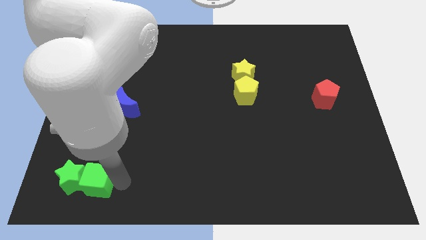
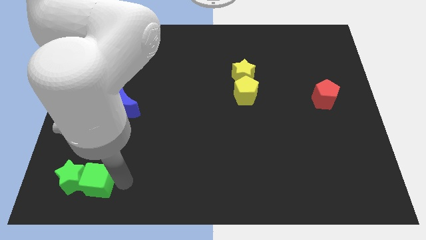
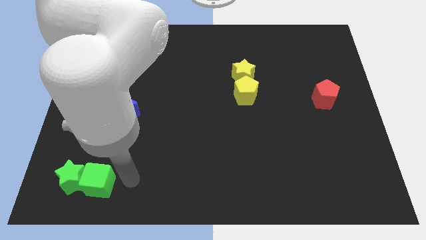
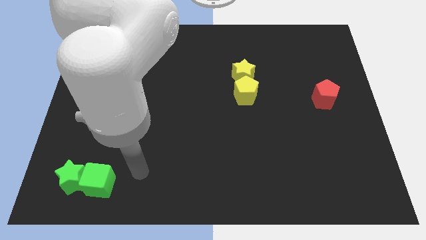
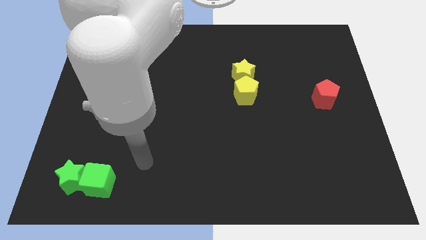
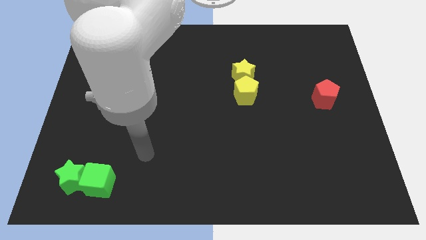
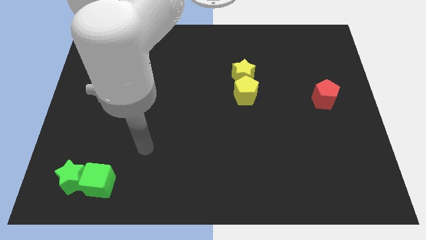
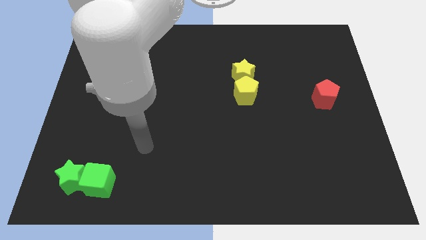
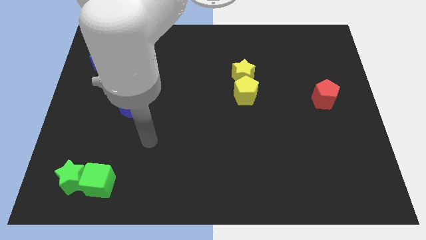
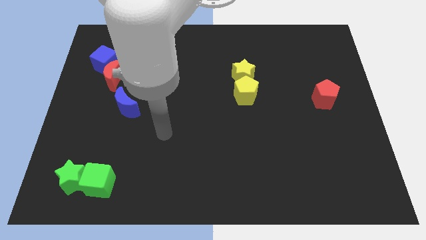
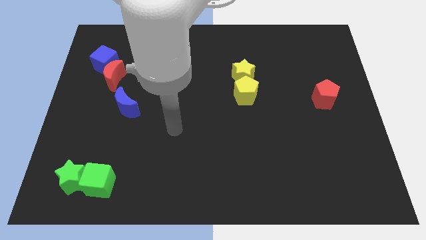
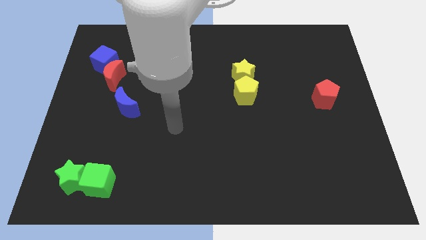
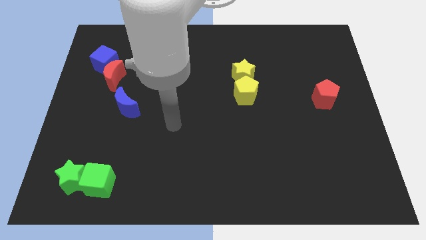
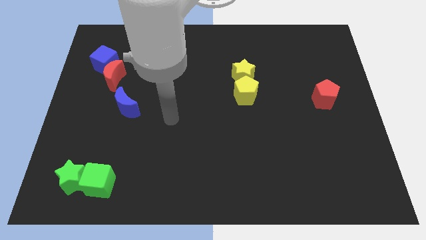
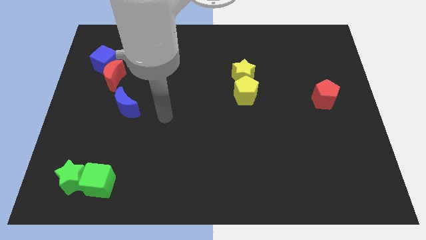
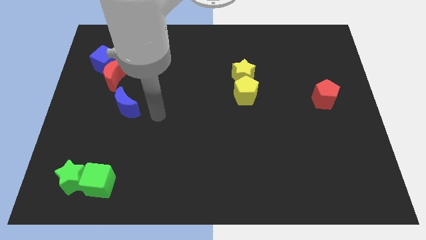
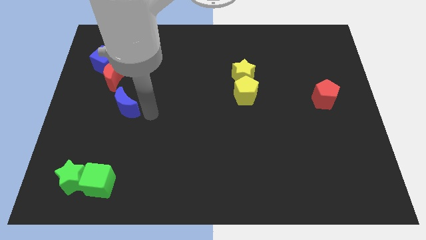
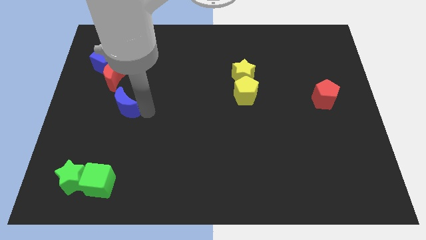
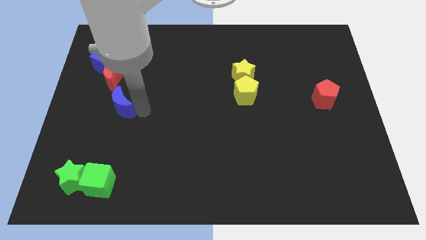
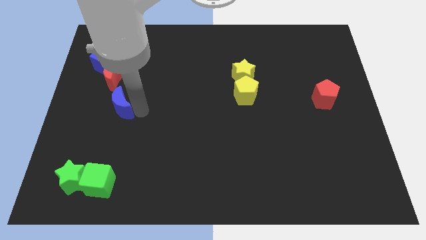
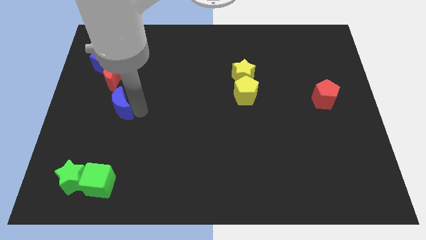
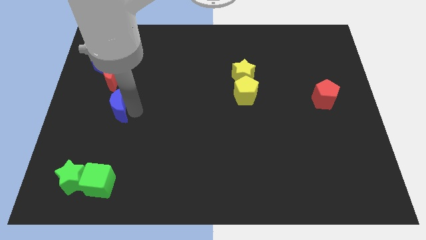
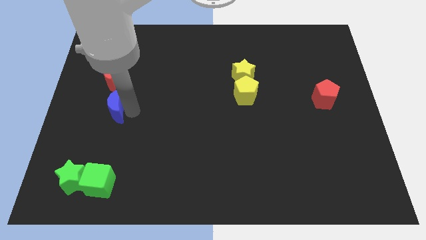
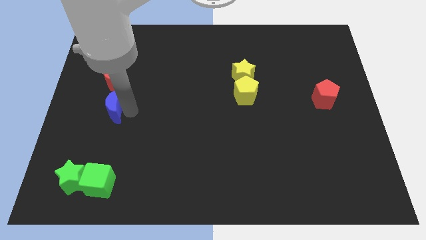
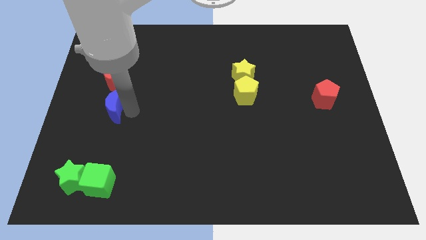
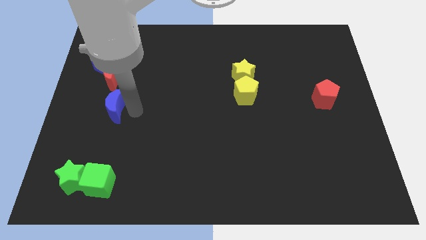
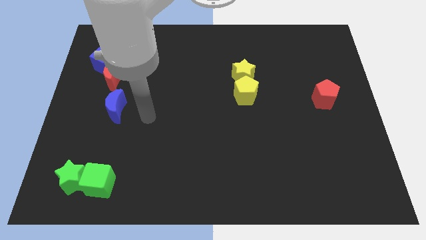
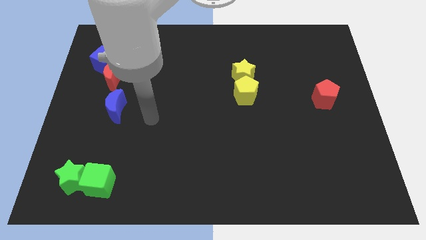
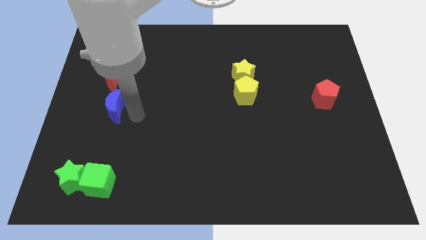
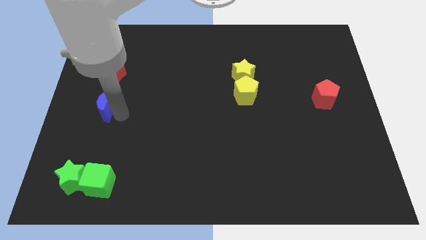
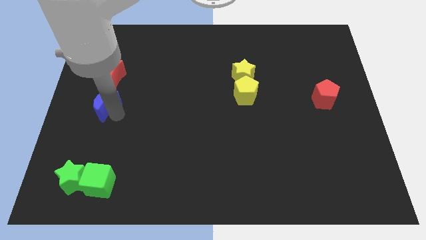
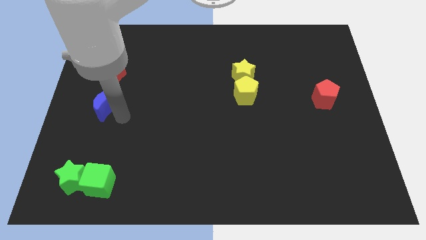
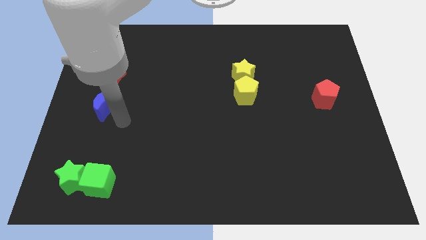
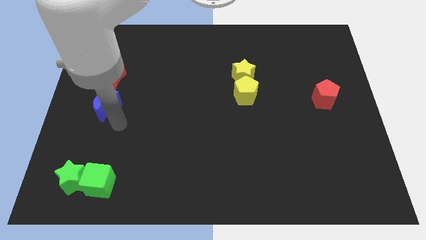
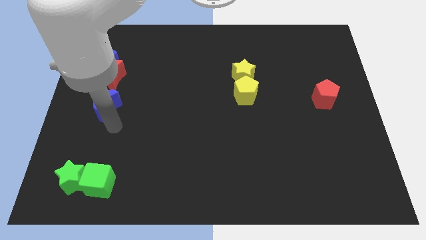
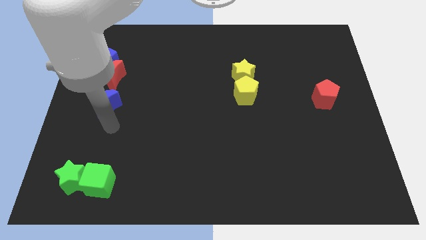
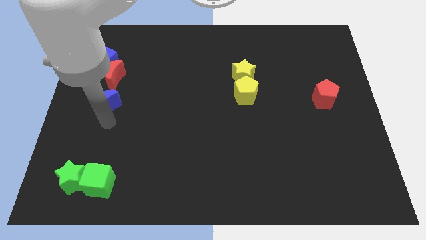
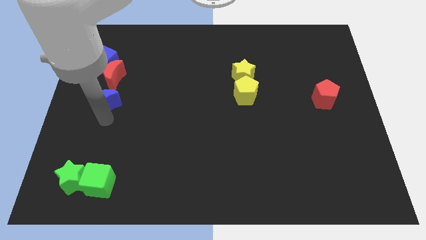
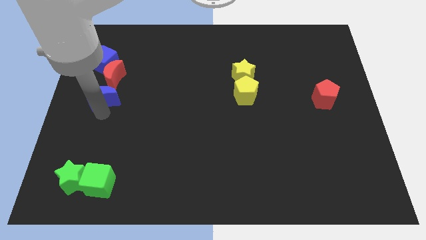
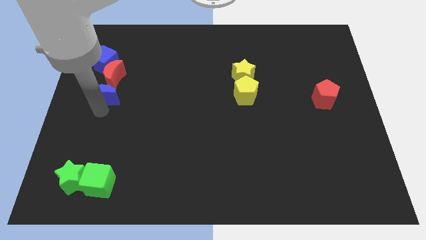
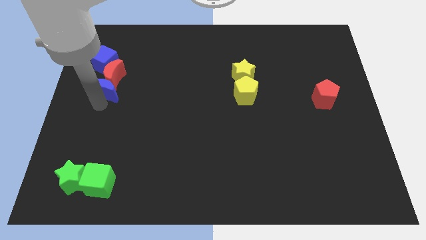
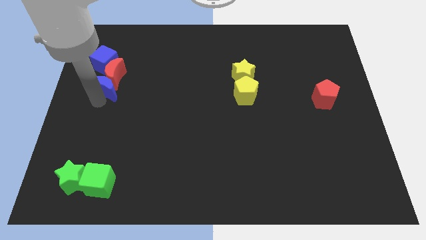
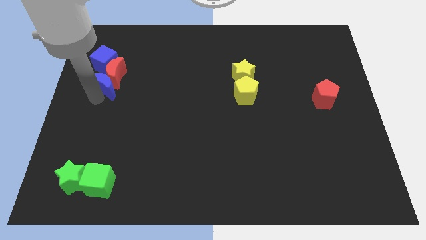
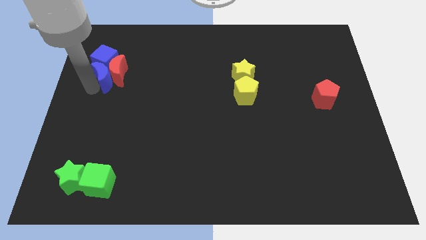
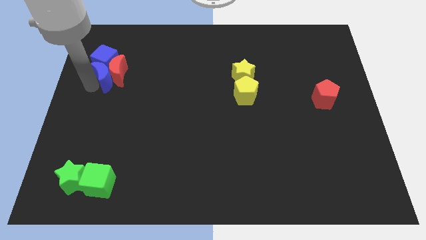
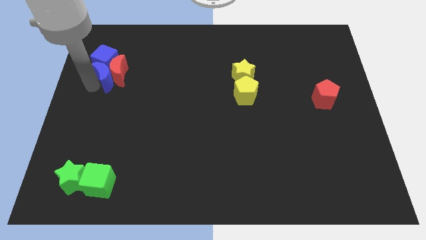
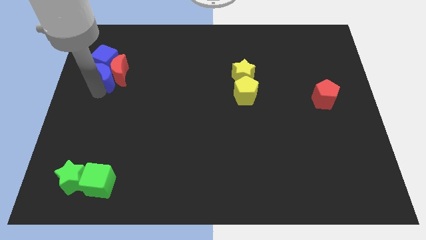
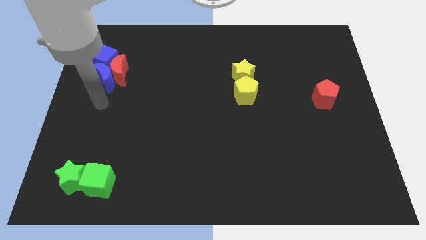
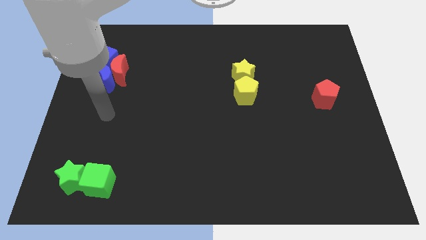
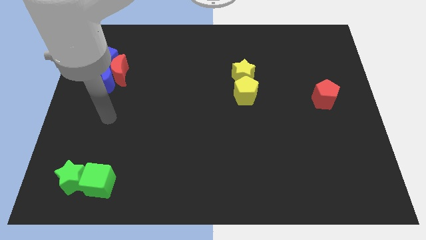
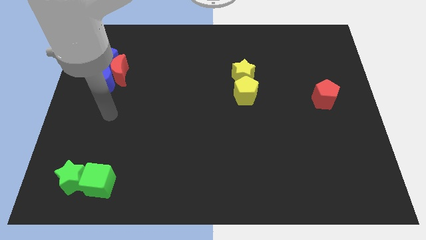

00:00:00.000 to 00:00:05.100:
place the blue moon left to the red moon

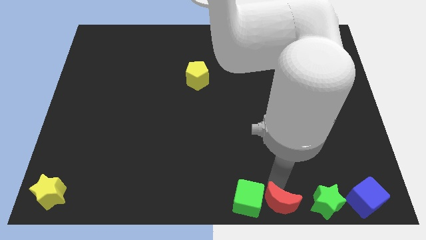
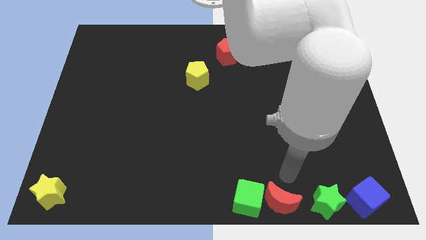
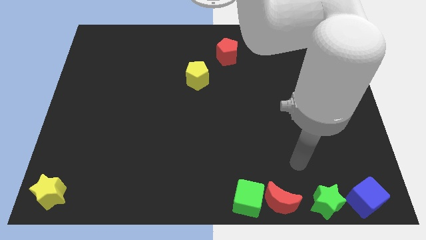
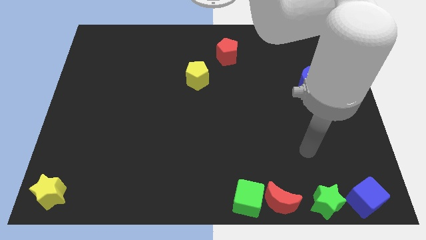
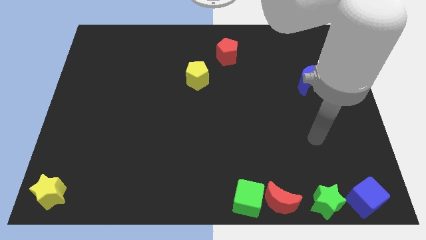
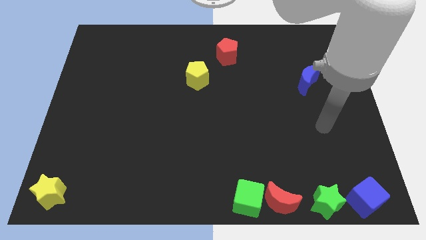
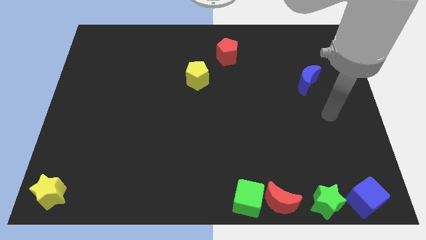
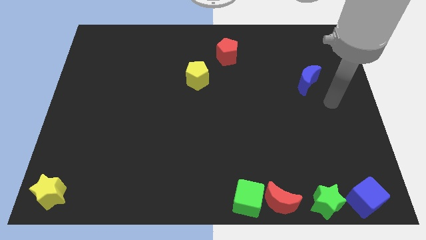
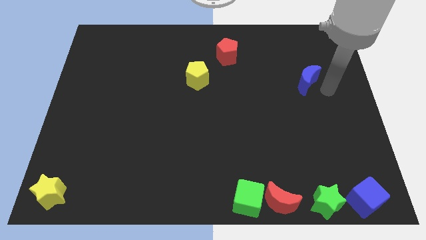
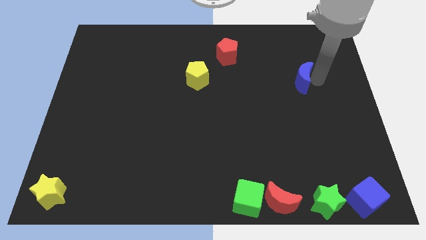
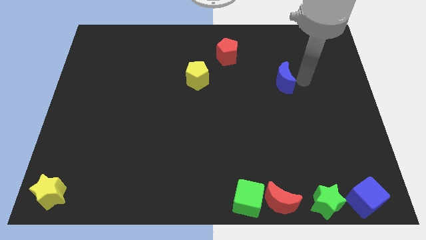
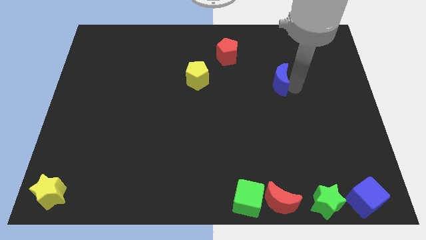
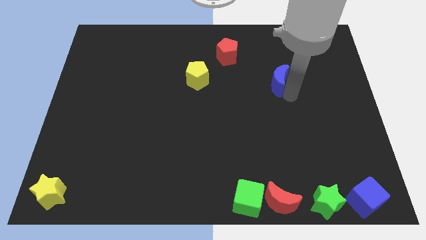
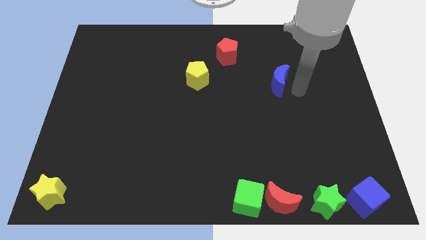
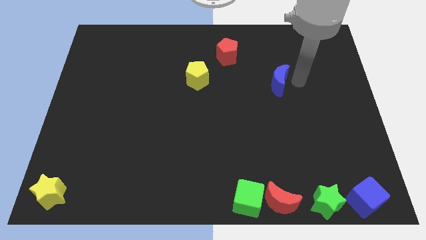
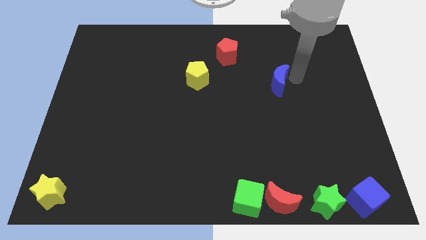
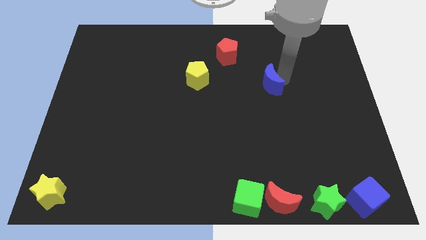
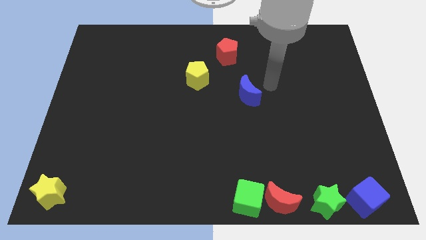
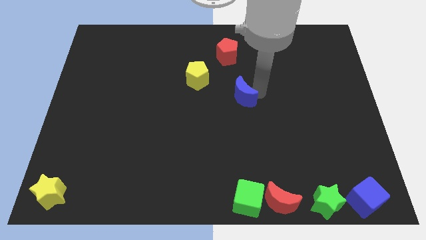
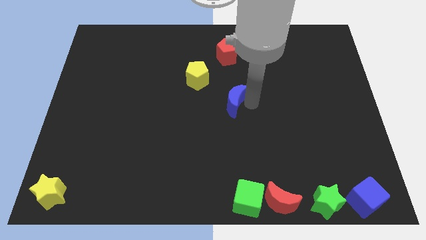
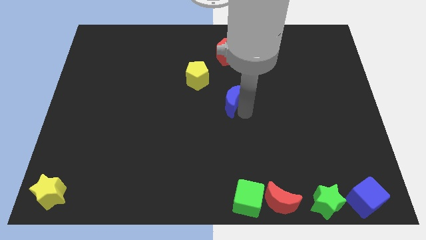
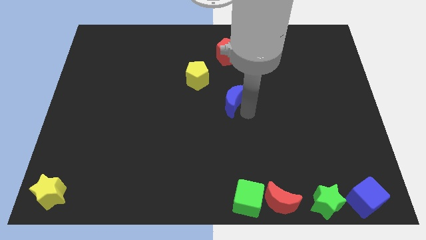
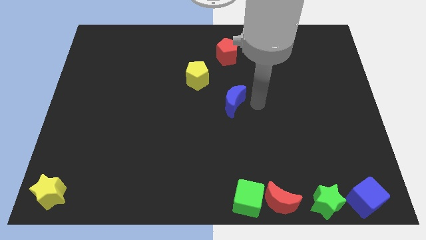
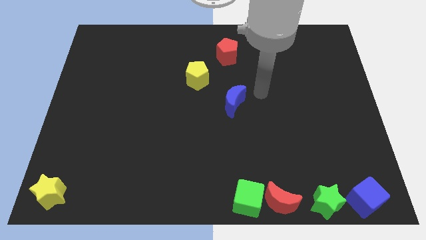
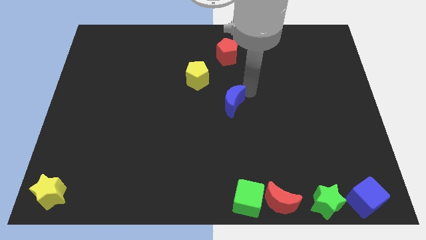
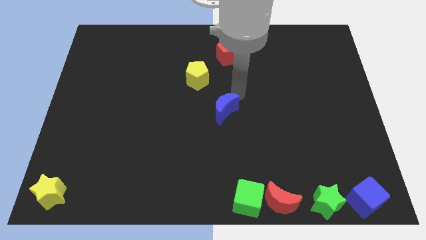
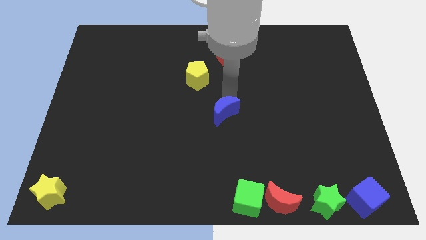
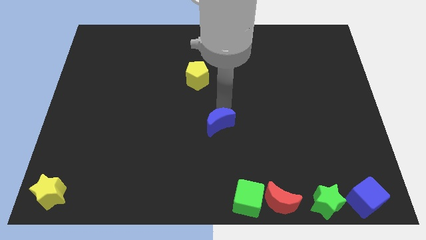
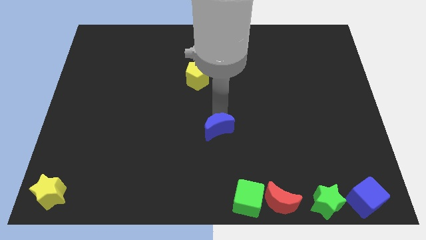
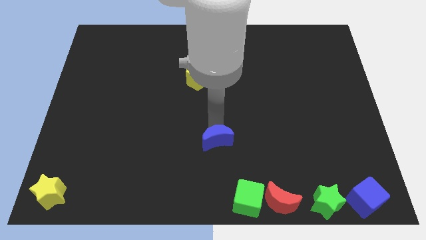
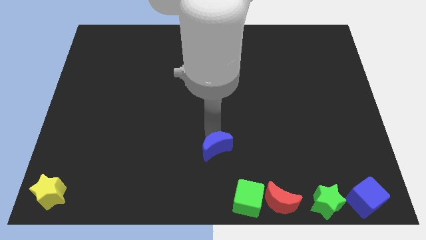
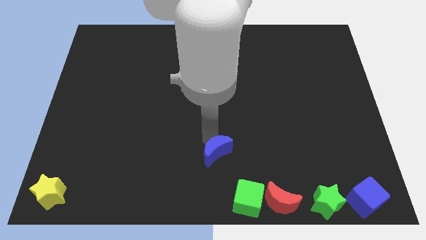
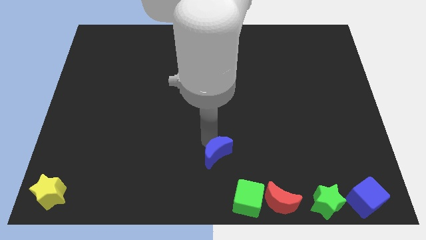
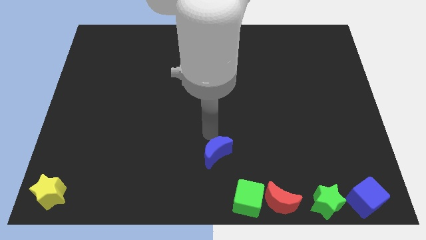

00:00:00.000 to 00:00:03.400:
move your arm away from the red moon

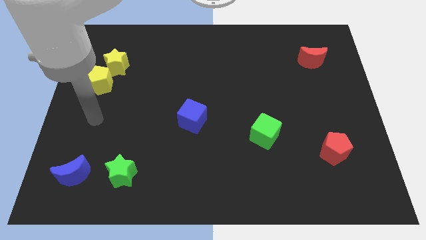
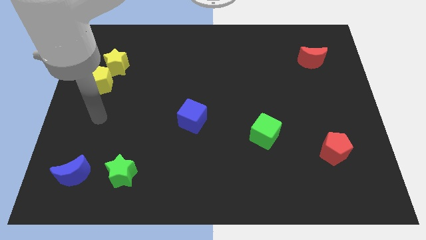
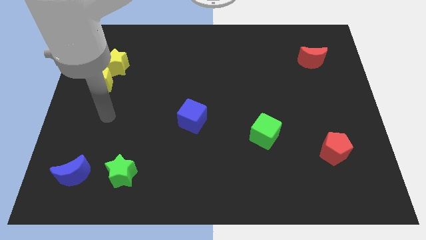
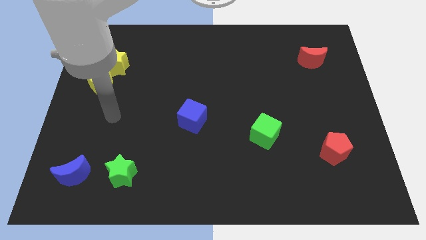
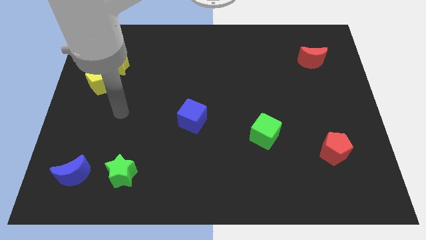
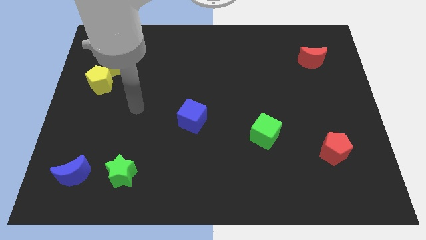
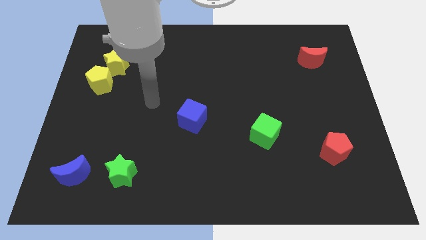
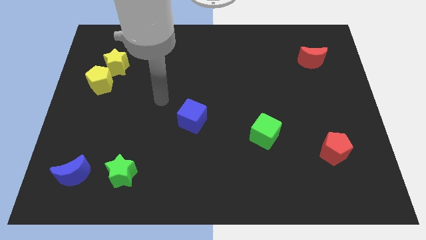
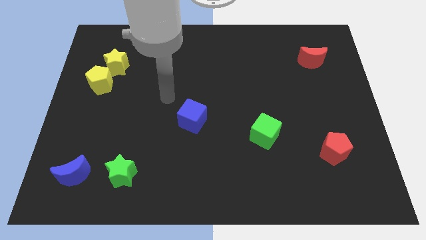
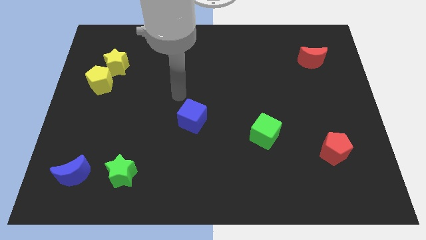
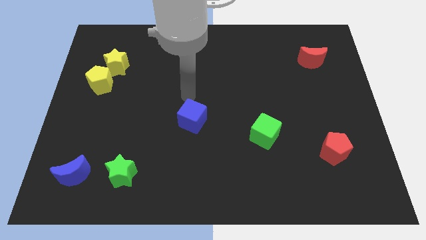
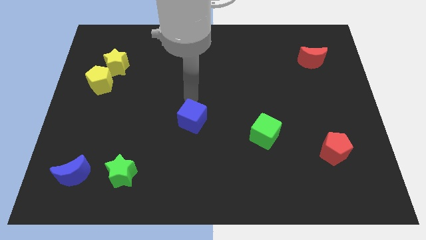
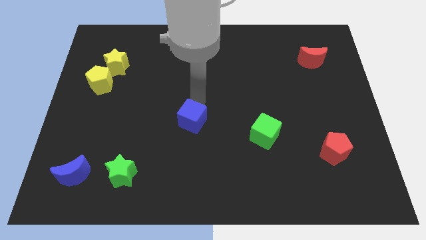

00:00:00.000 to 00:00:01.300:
place your arm above the blue cube
